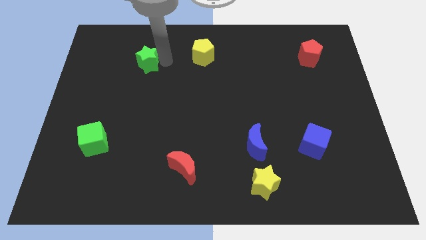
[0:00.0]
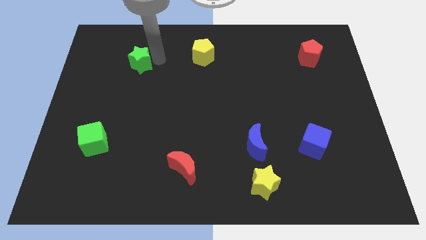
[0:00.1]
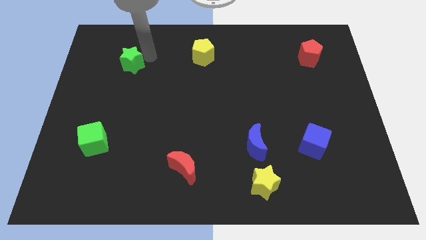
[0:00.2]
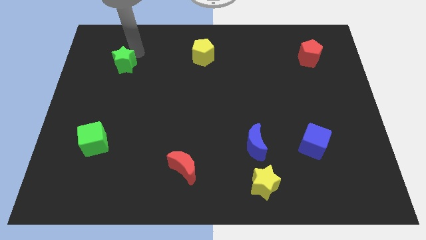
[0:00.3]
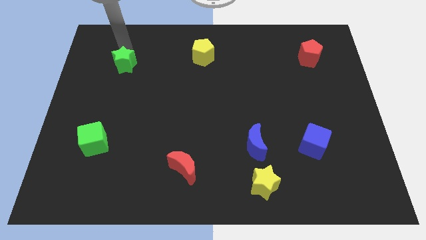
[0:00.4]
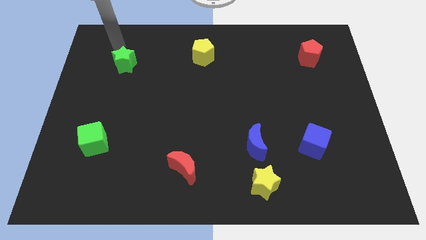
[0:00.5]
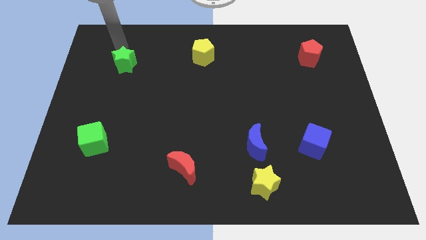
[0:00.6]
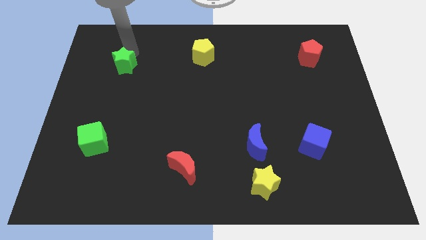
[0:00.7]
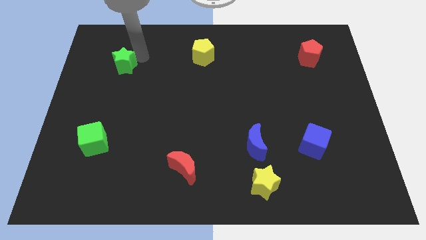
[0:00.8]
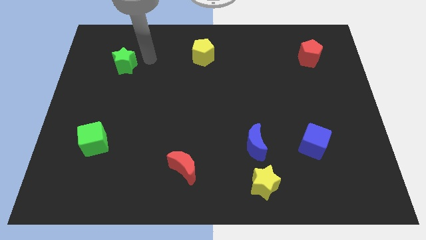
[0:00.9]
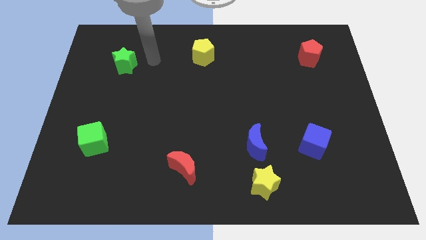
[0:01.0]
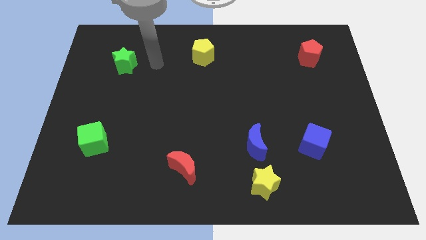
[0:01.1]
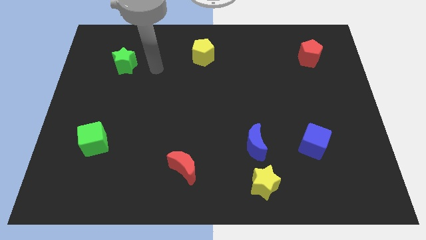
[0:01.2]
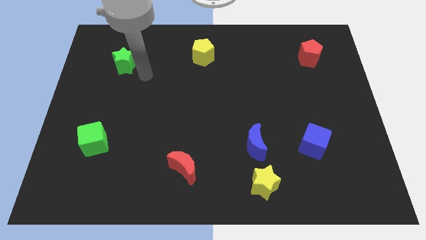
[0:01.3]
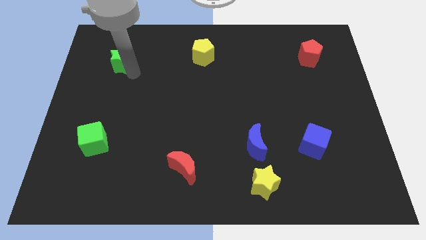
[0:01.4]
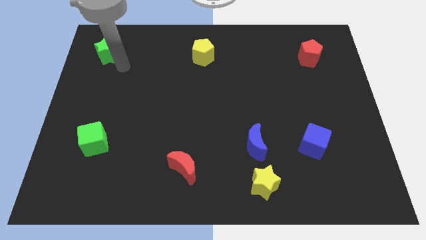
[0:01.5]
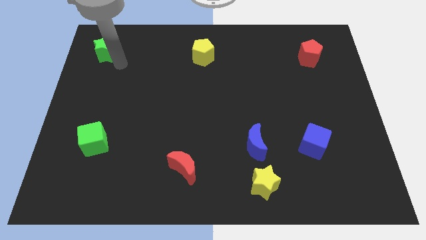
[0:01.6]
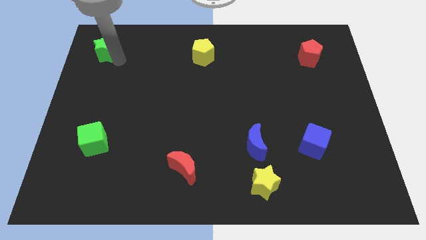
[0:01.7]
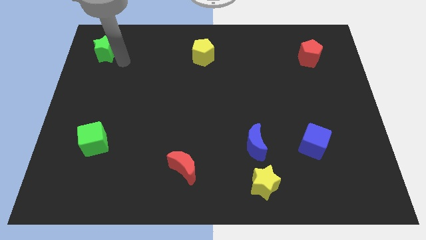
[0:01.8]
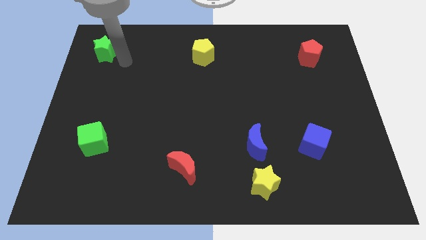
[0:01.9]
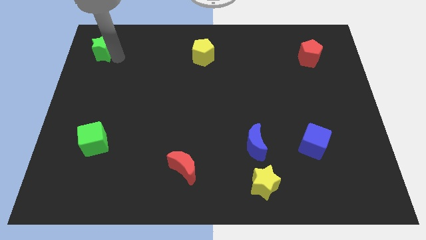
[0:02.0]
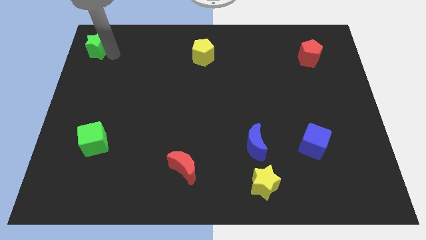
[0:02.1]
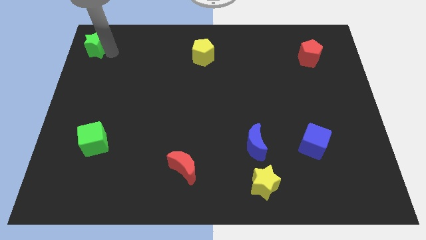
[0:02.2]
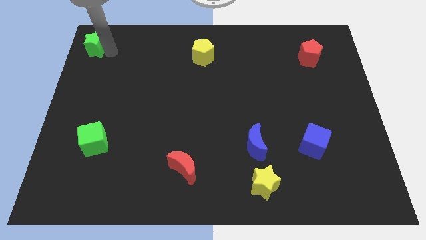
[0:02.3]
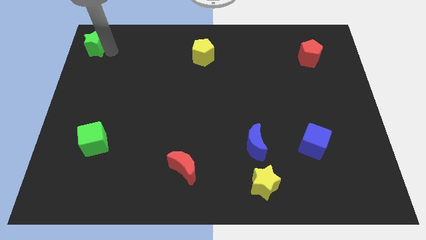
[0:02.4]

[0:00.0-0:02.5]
place the green star above the green cube

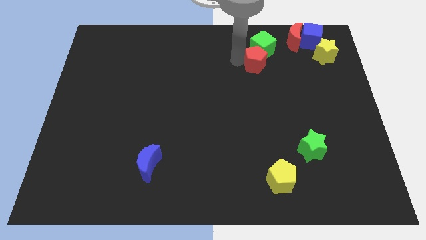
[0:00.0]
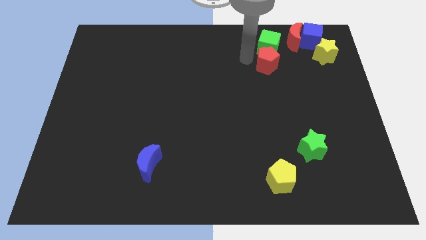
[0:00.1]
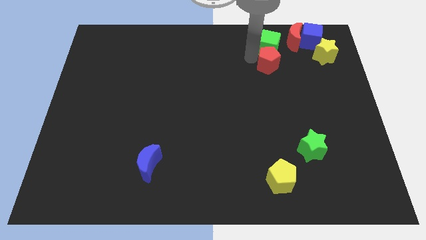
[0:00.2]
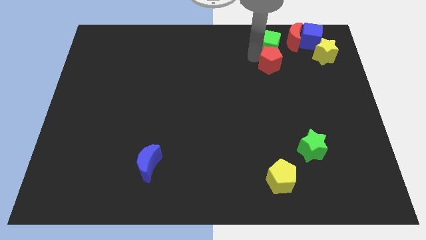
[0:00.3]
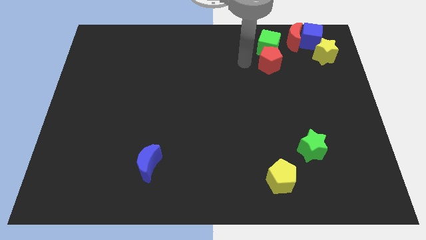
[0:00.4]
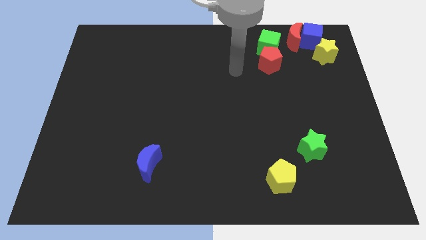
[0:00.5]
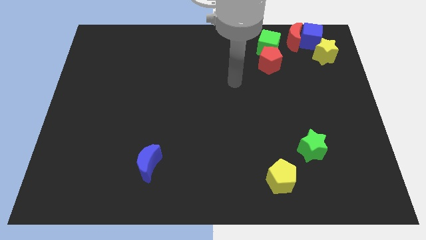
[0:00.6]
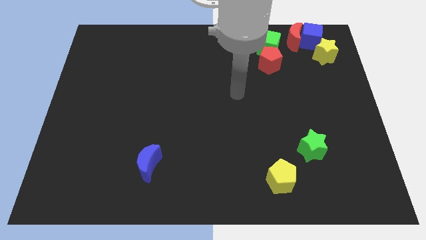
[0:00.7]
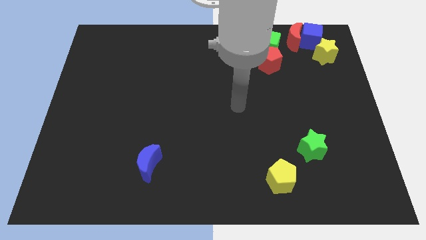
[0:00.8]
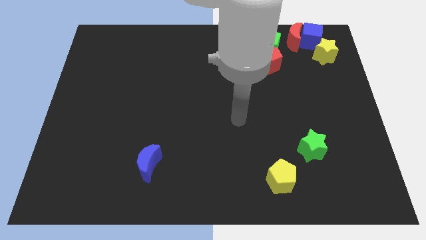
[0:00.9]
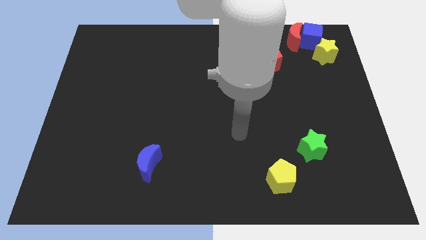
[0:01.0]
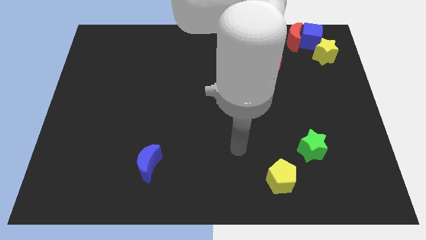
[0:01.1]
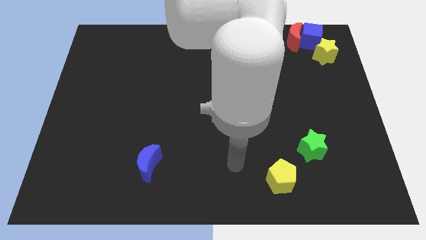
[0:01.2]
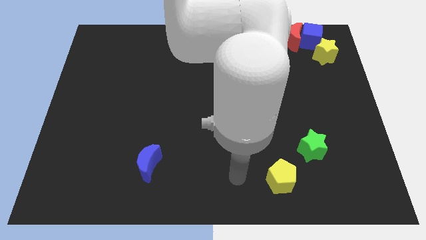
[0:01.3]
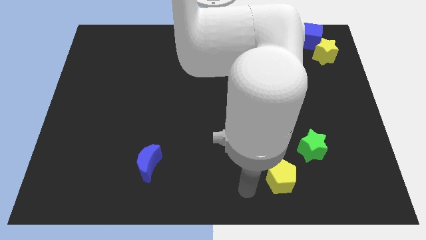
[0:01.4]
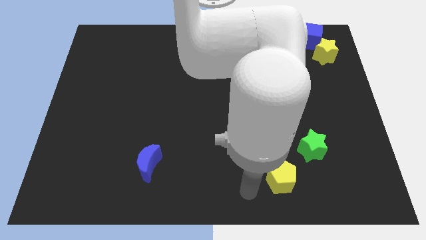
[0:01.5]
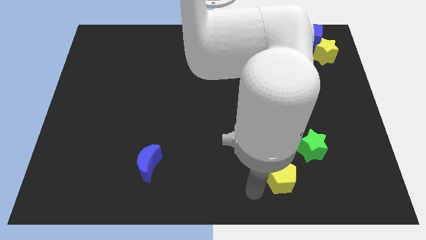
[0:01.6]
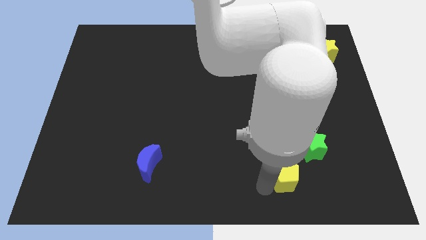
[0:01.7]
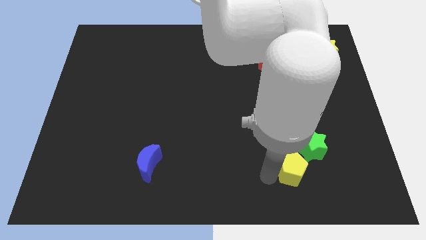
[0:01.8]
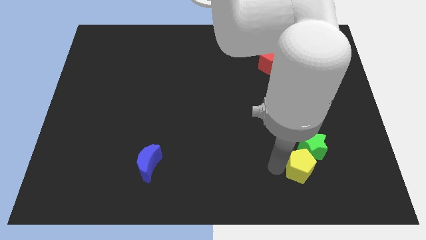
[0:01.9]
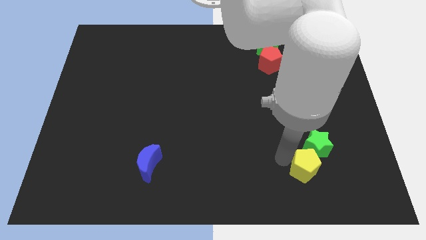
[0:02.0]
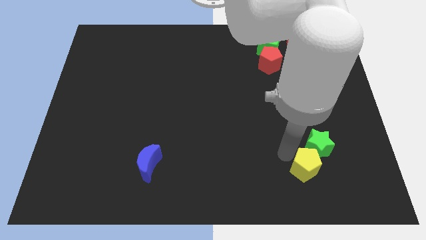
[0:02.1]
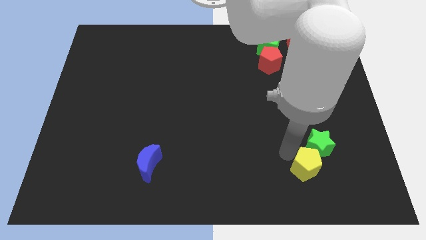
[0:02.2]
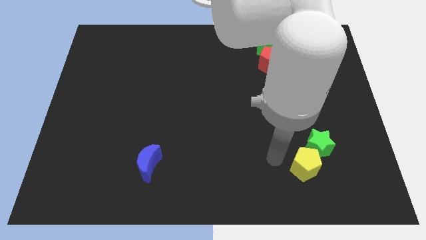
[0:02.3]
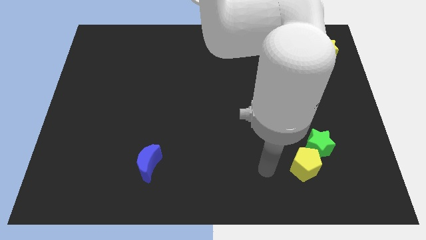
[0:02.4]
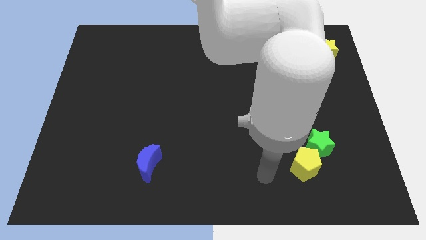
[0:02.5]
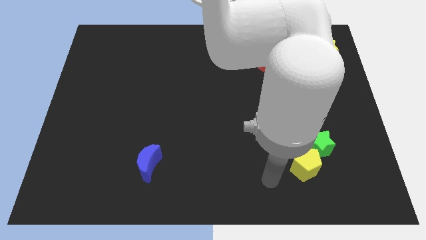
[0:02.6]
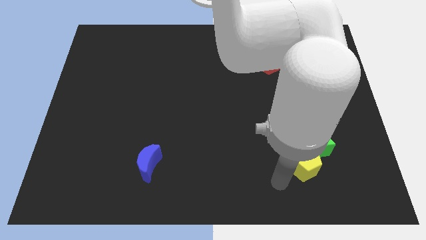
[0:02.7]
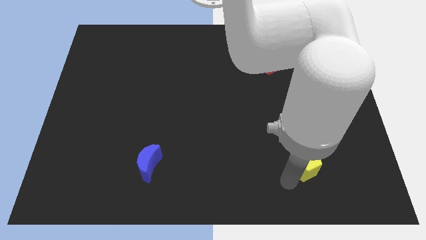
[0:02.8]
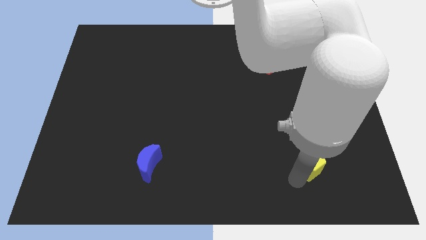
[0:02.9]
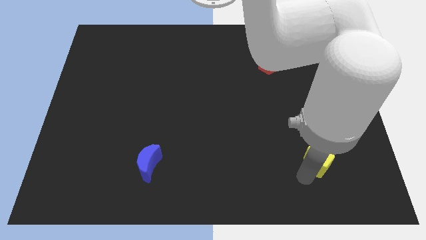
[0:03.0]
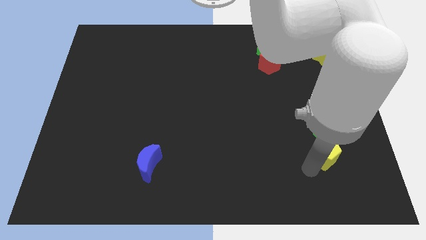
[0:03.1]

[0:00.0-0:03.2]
move yellow pentagon to the green star

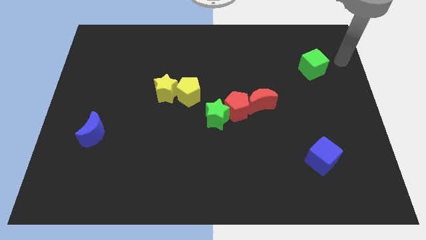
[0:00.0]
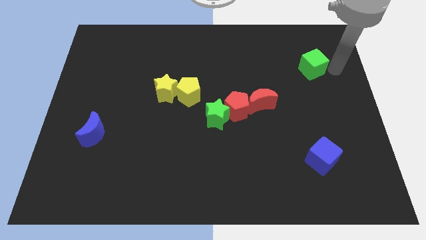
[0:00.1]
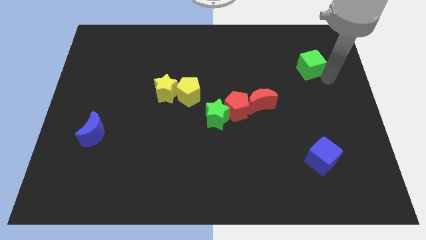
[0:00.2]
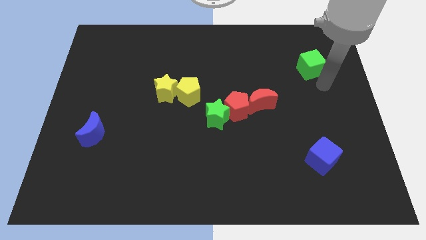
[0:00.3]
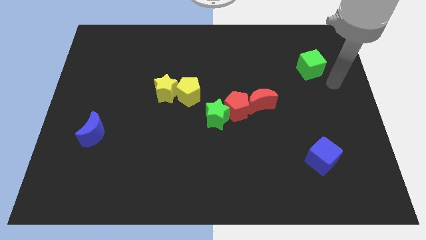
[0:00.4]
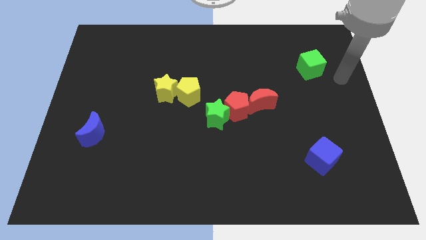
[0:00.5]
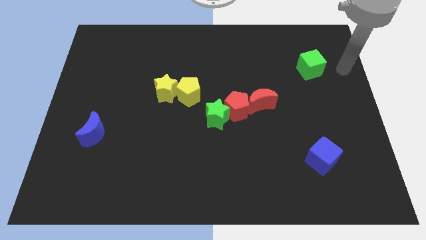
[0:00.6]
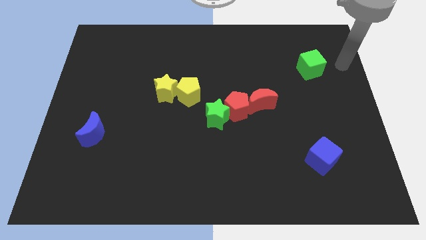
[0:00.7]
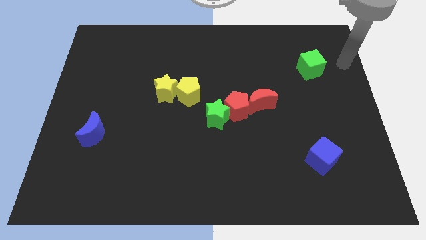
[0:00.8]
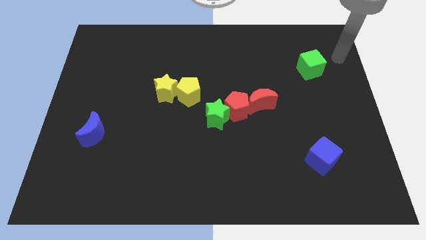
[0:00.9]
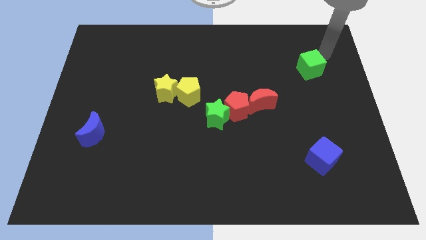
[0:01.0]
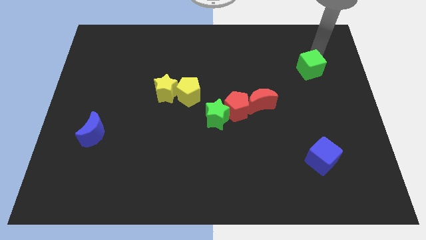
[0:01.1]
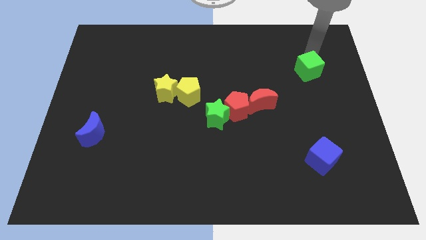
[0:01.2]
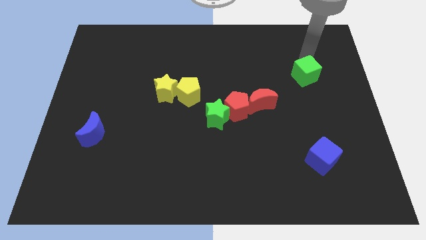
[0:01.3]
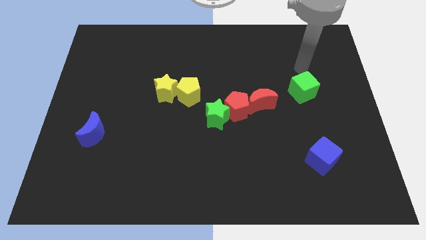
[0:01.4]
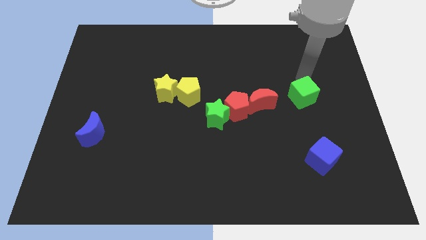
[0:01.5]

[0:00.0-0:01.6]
push the green cube slightly to the bottom of the board

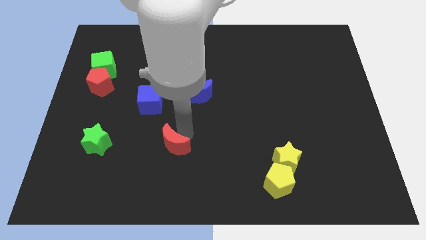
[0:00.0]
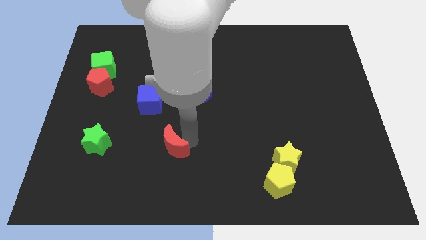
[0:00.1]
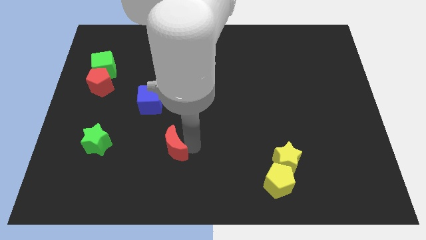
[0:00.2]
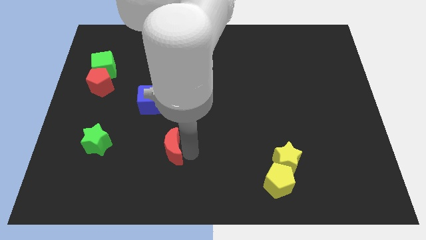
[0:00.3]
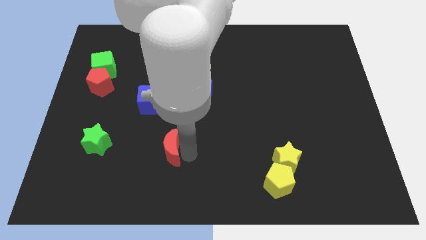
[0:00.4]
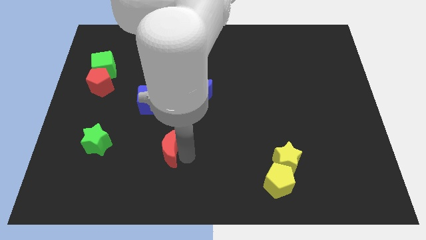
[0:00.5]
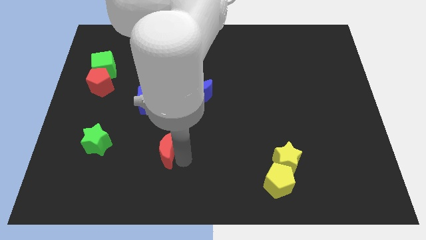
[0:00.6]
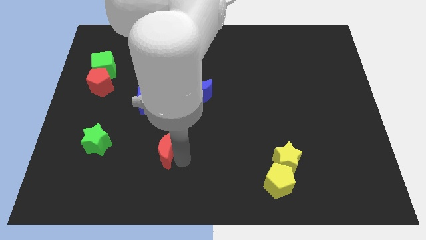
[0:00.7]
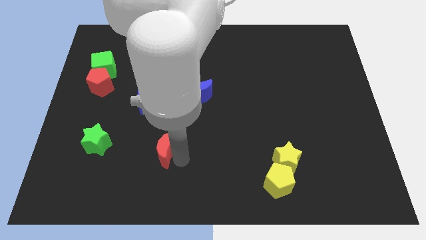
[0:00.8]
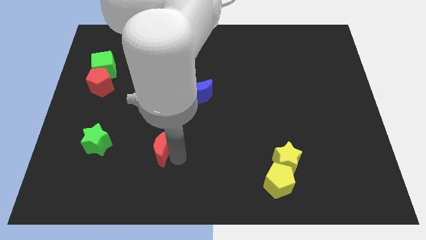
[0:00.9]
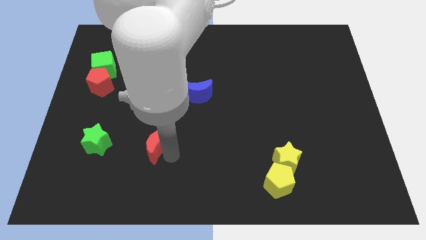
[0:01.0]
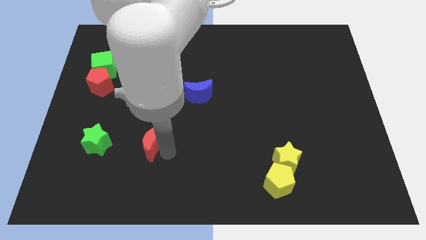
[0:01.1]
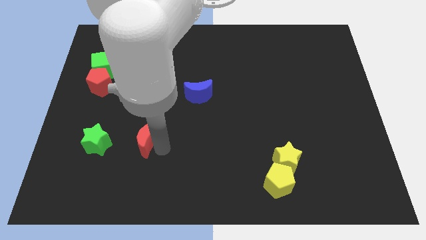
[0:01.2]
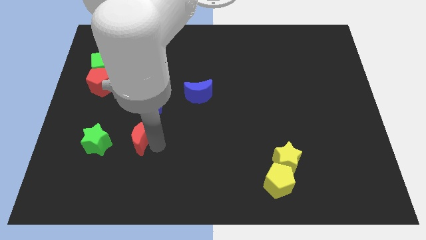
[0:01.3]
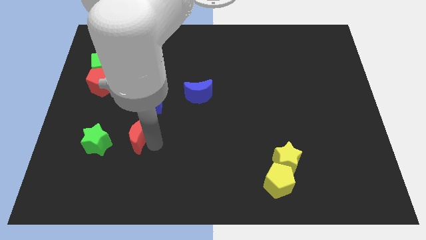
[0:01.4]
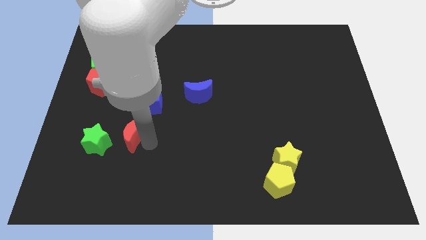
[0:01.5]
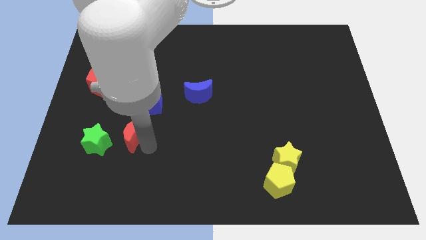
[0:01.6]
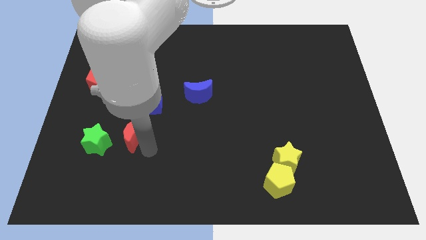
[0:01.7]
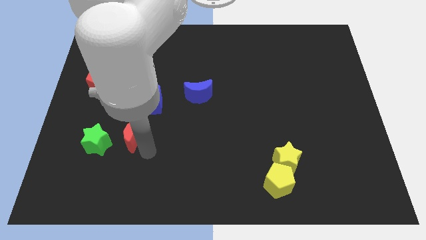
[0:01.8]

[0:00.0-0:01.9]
place the red crescent horizontal to the left of the green star
